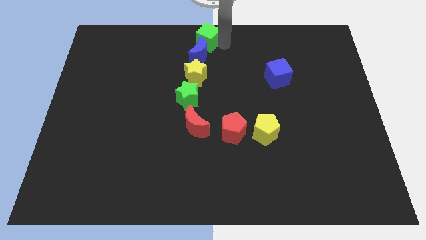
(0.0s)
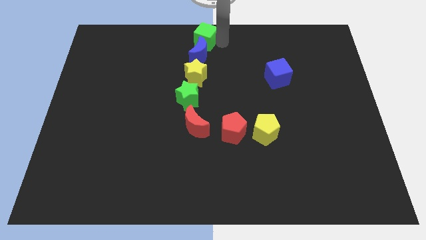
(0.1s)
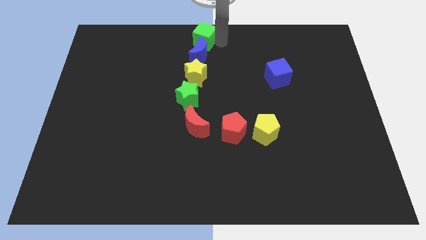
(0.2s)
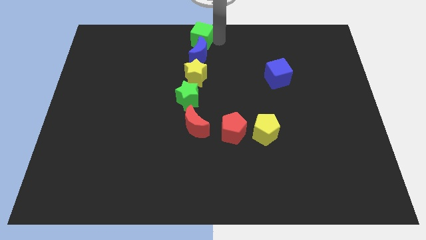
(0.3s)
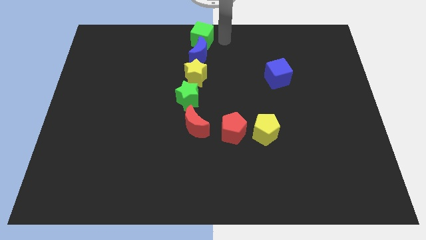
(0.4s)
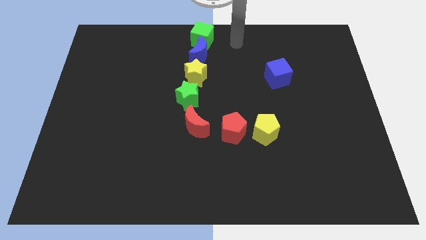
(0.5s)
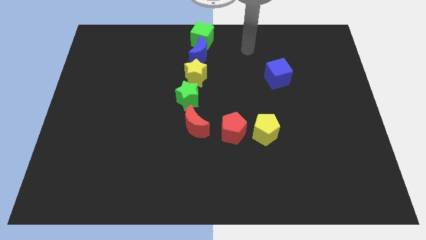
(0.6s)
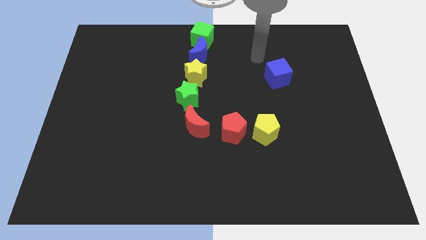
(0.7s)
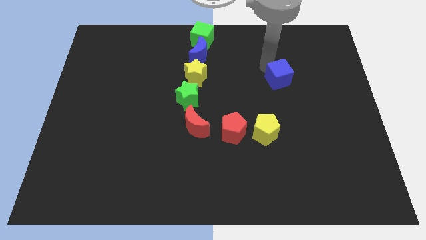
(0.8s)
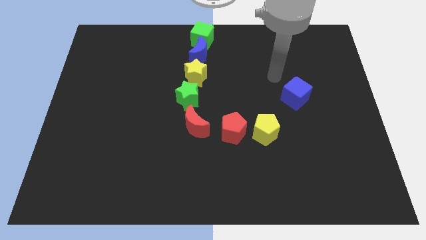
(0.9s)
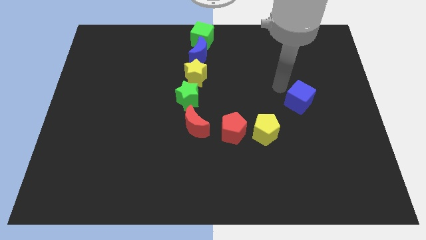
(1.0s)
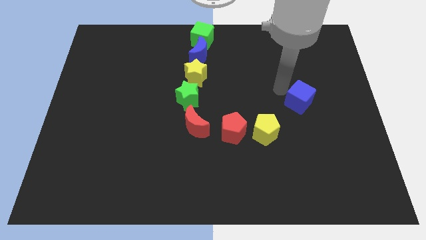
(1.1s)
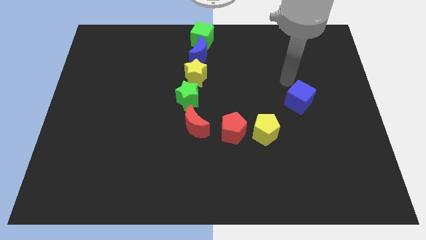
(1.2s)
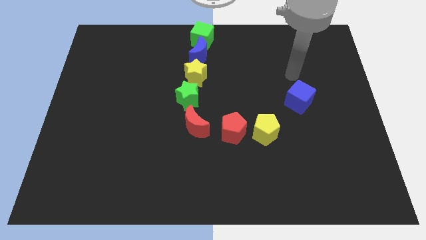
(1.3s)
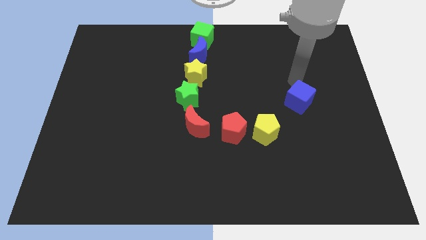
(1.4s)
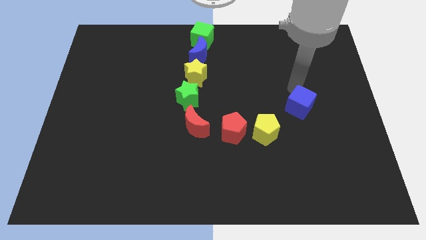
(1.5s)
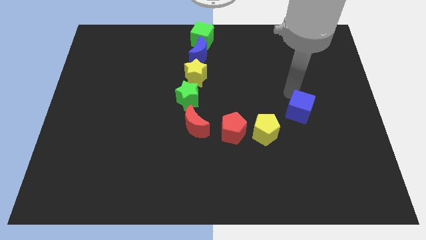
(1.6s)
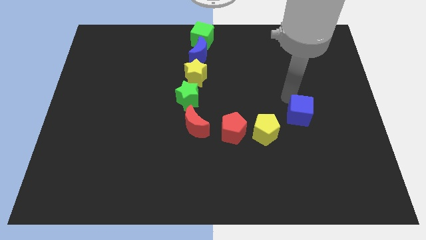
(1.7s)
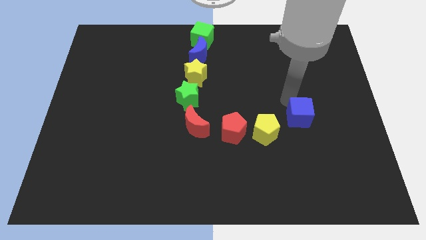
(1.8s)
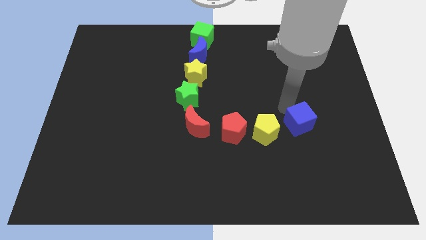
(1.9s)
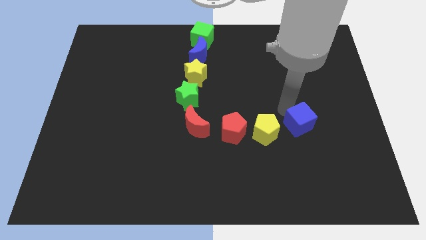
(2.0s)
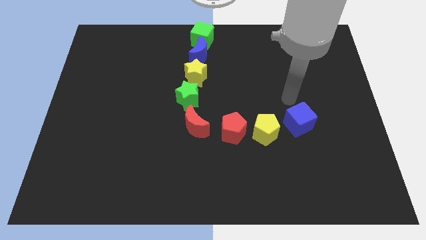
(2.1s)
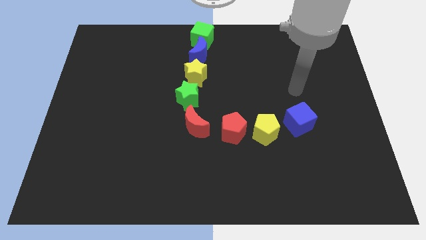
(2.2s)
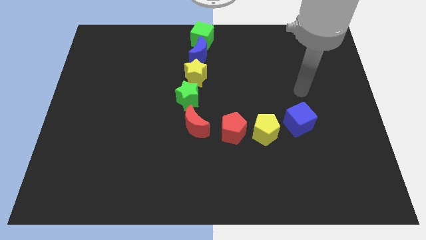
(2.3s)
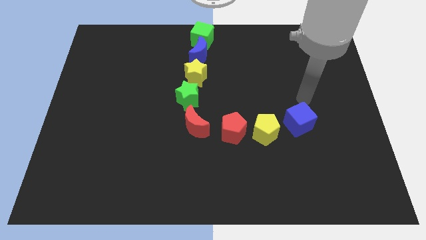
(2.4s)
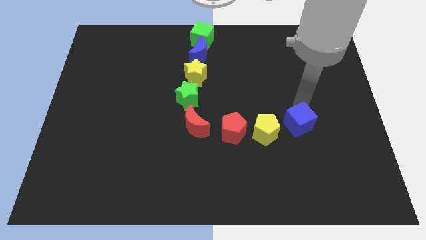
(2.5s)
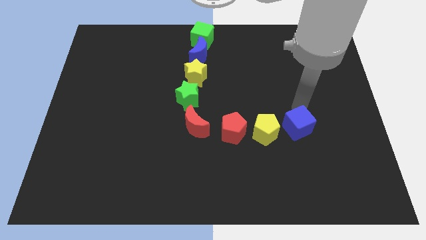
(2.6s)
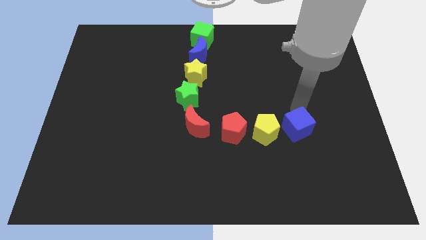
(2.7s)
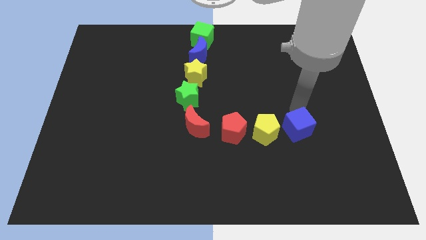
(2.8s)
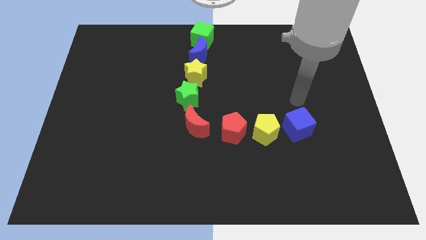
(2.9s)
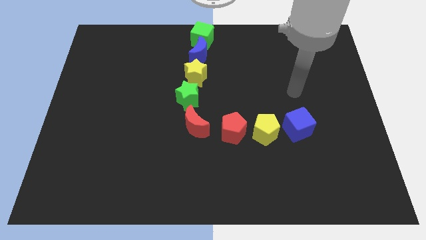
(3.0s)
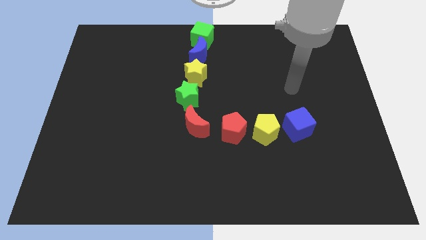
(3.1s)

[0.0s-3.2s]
place the blue cube at the right side of the yellow pentagon

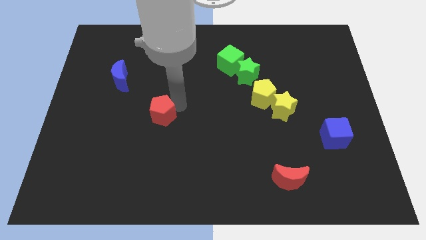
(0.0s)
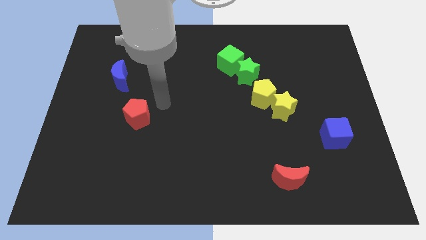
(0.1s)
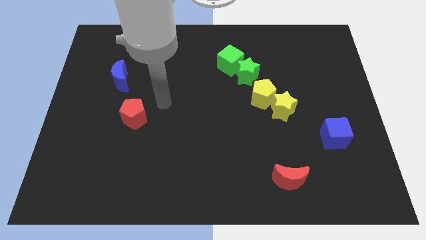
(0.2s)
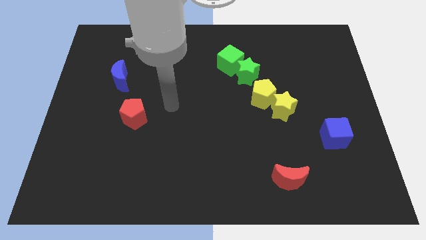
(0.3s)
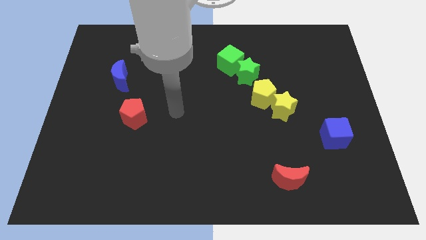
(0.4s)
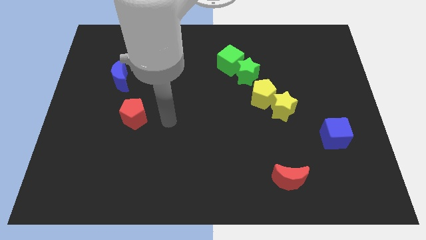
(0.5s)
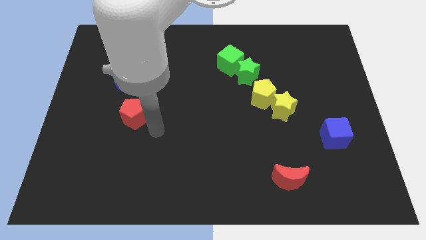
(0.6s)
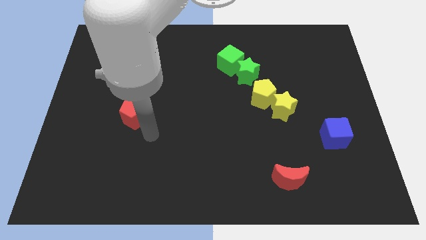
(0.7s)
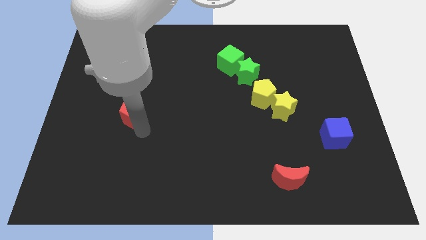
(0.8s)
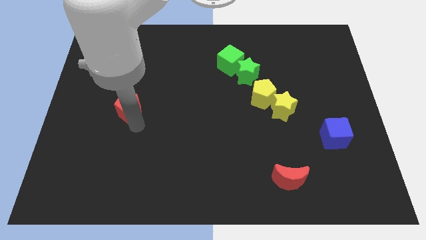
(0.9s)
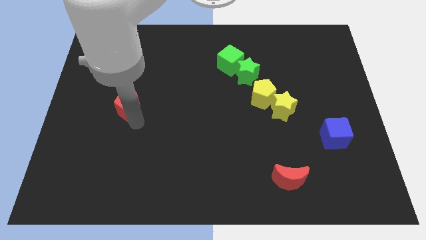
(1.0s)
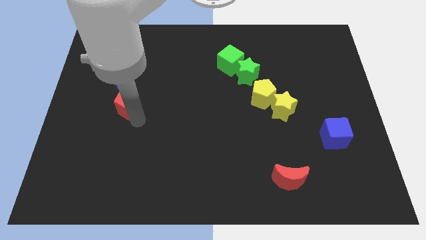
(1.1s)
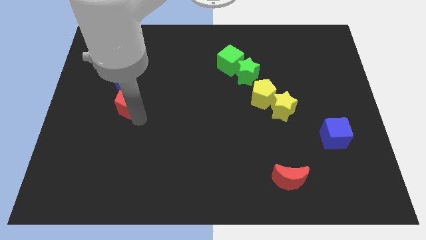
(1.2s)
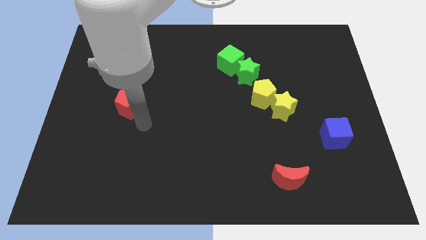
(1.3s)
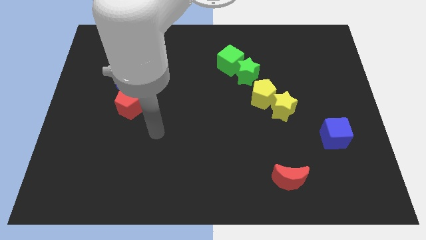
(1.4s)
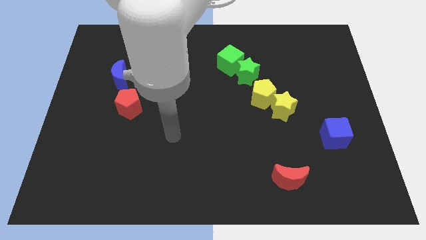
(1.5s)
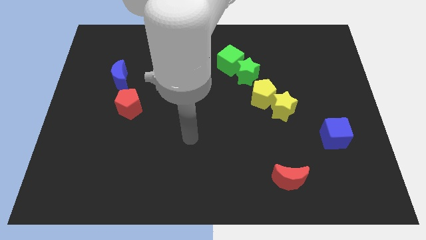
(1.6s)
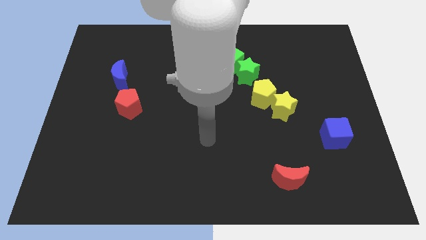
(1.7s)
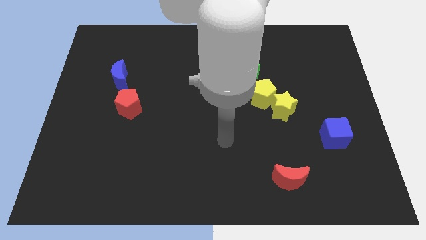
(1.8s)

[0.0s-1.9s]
move the red pentagon to the bottom side of the blue moon

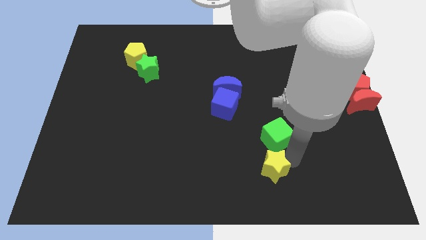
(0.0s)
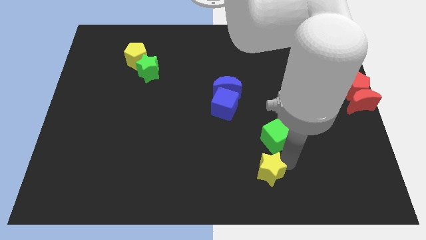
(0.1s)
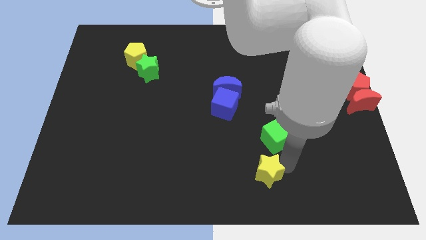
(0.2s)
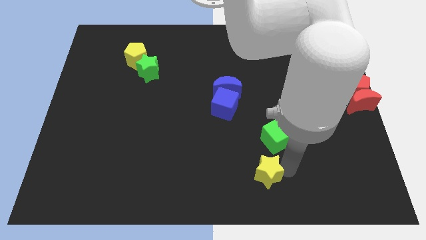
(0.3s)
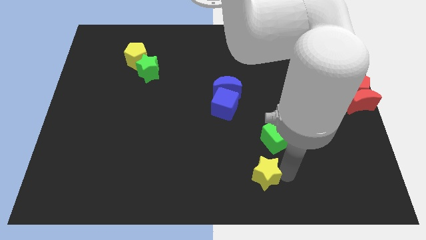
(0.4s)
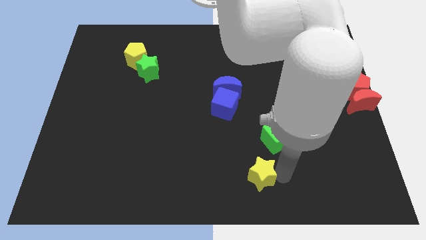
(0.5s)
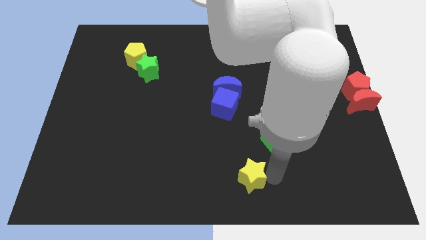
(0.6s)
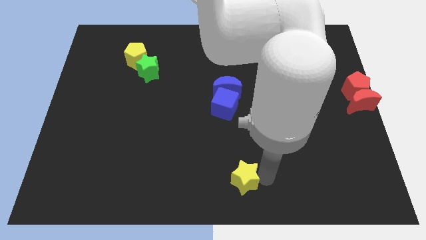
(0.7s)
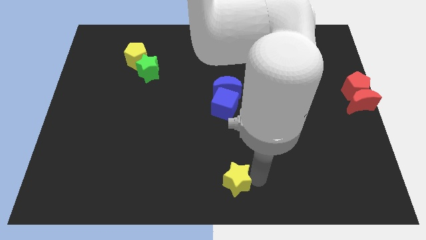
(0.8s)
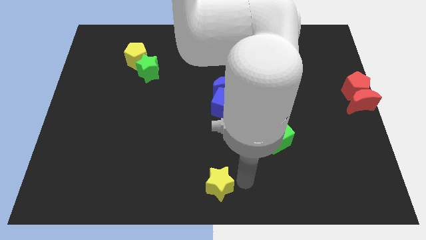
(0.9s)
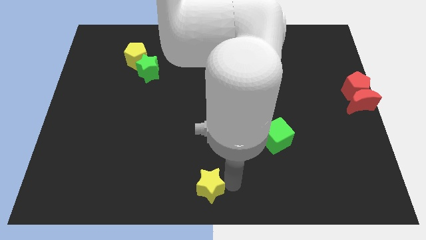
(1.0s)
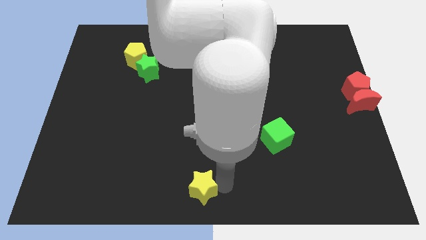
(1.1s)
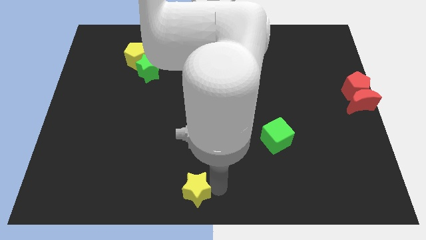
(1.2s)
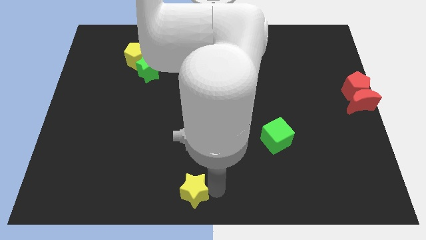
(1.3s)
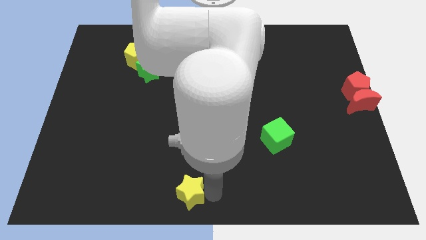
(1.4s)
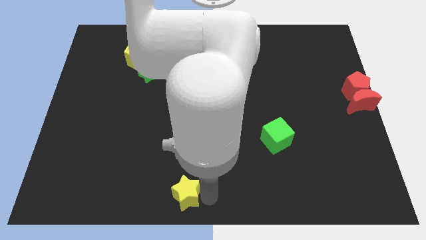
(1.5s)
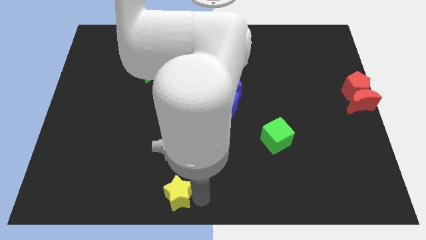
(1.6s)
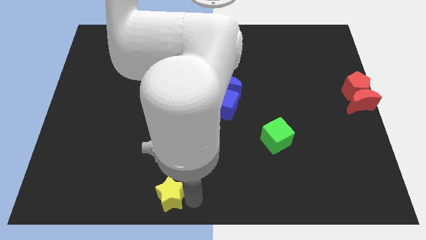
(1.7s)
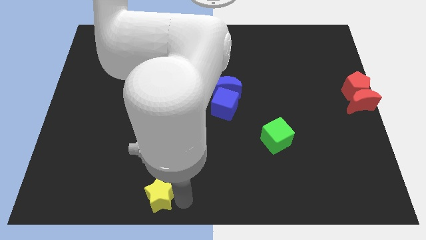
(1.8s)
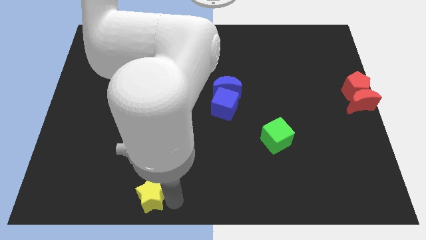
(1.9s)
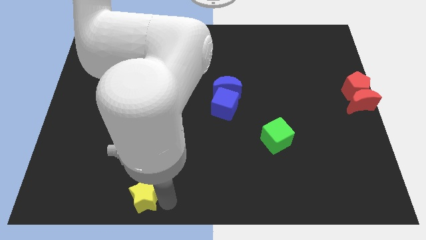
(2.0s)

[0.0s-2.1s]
move the yellow star towards the bottom left

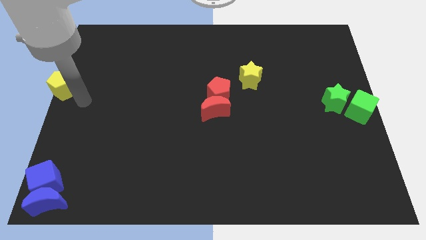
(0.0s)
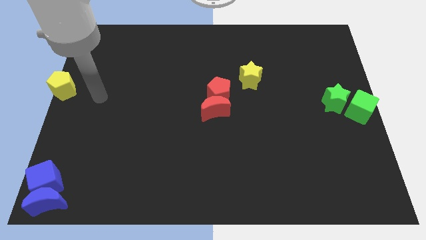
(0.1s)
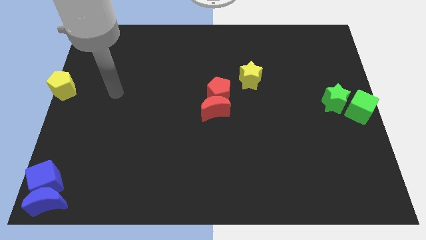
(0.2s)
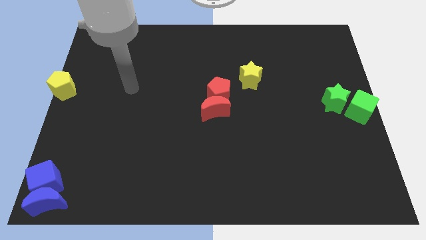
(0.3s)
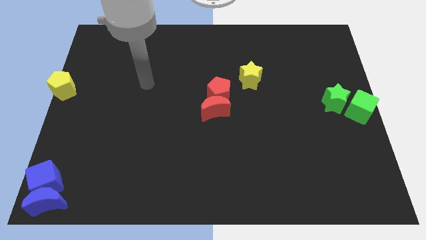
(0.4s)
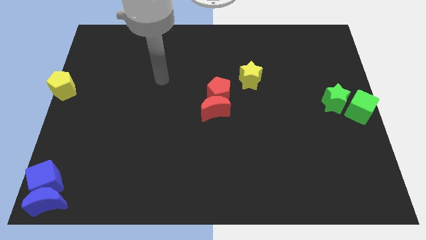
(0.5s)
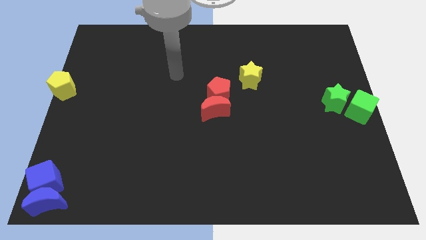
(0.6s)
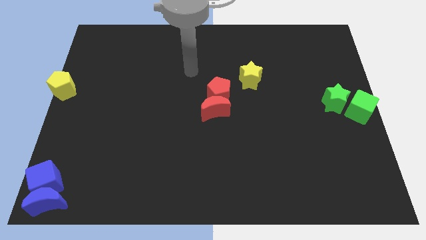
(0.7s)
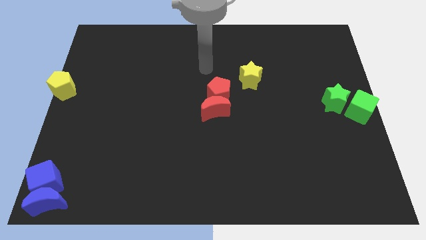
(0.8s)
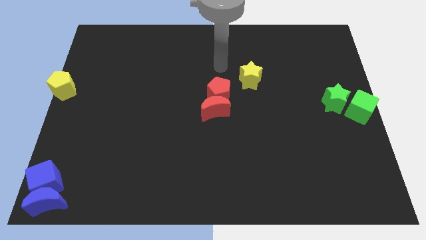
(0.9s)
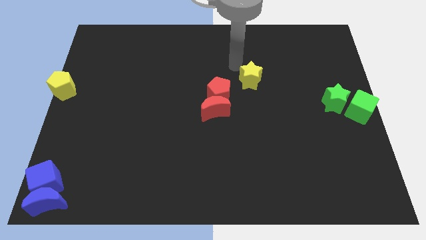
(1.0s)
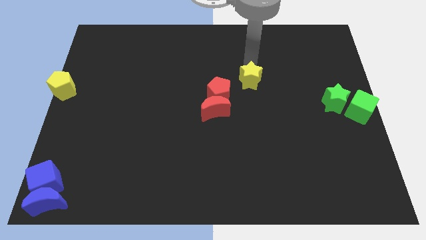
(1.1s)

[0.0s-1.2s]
move the arm towards the yellow star

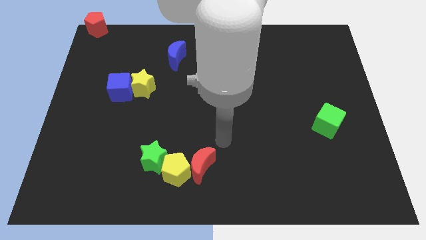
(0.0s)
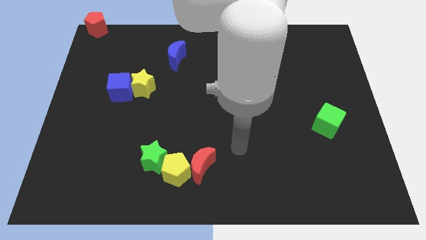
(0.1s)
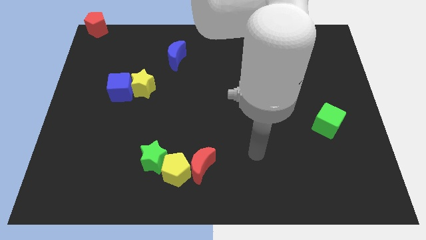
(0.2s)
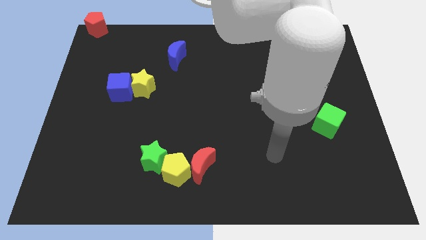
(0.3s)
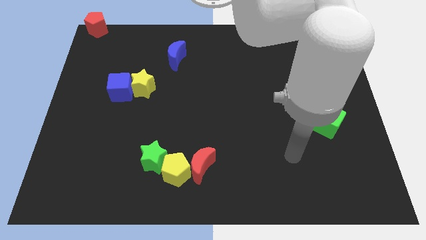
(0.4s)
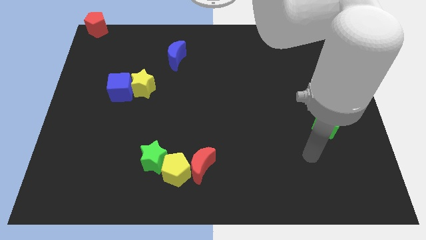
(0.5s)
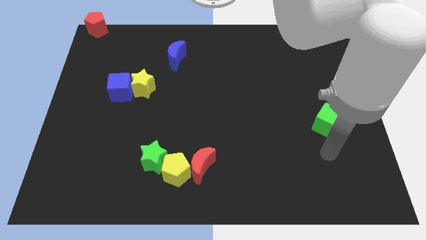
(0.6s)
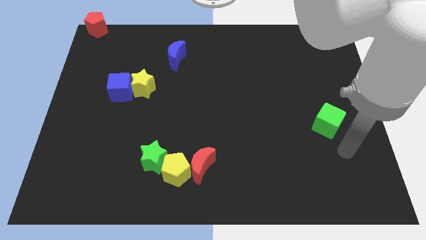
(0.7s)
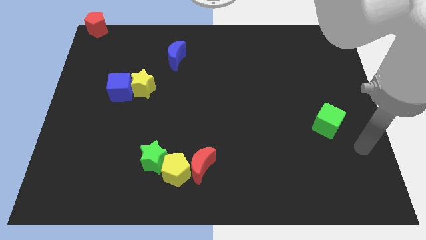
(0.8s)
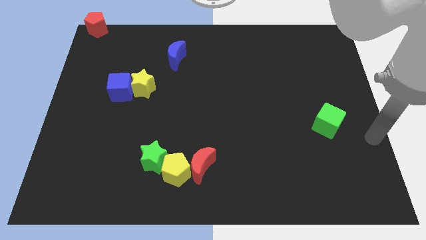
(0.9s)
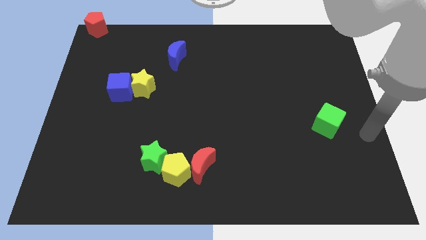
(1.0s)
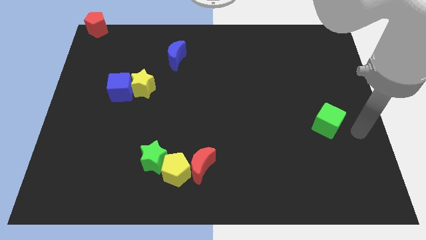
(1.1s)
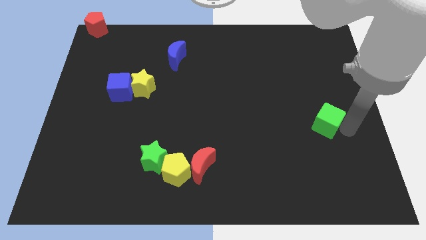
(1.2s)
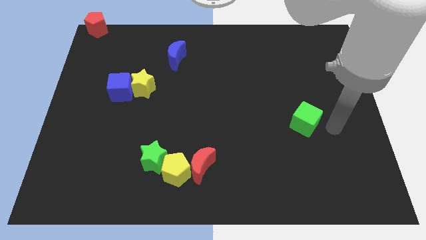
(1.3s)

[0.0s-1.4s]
move your arm to the right of green cube
